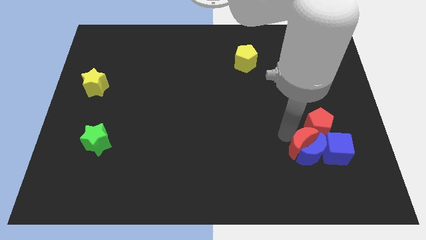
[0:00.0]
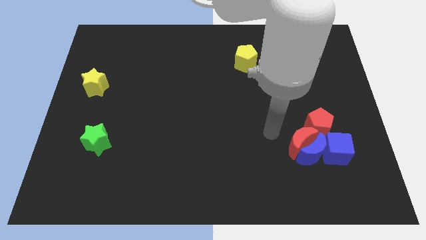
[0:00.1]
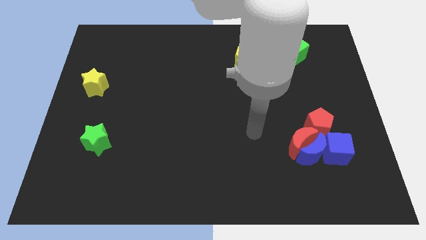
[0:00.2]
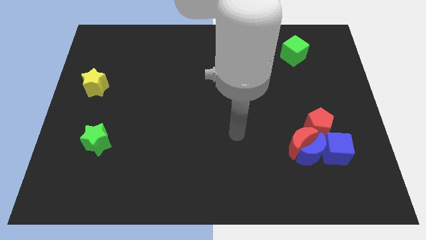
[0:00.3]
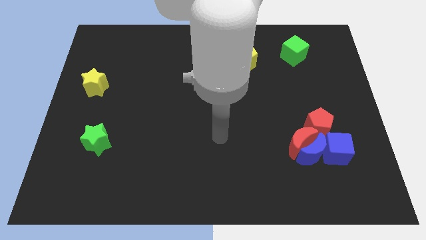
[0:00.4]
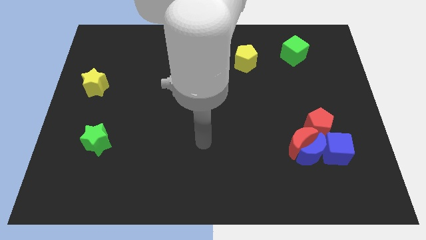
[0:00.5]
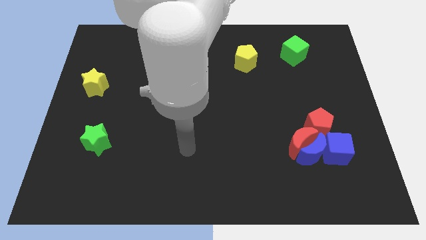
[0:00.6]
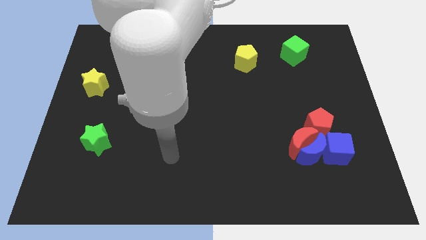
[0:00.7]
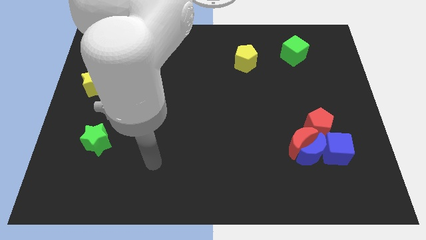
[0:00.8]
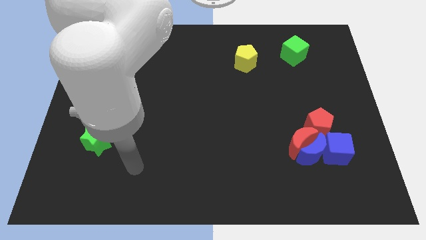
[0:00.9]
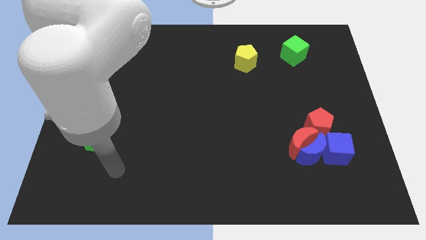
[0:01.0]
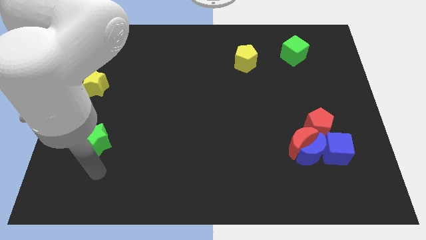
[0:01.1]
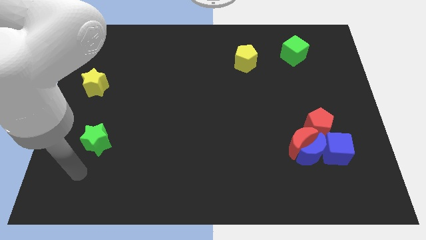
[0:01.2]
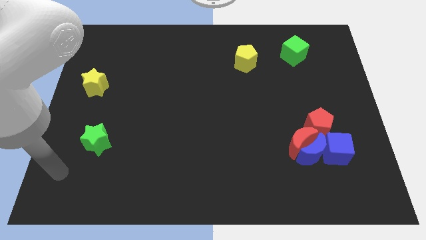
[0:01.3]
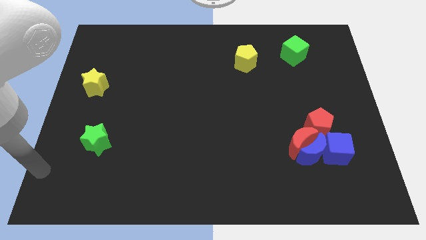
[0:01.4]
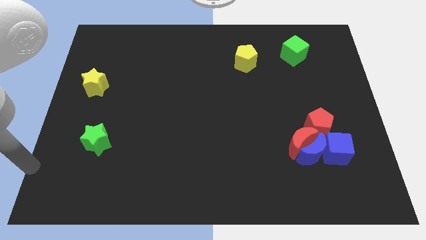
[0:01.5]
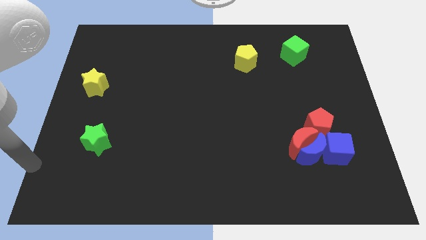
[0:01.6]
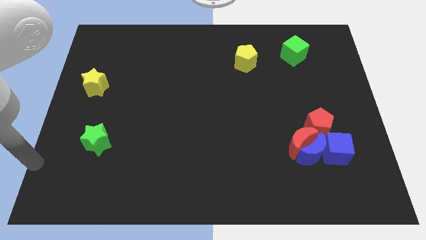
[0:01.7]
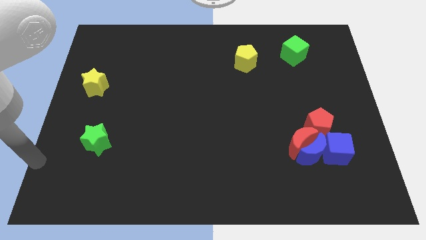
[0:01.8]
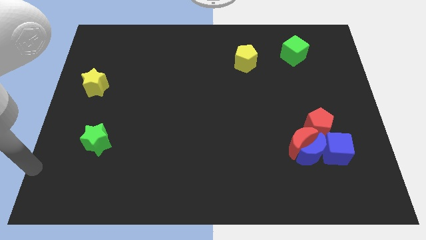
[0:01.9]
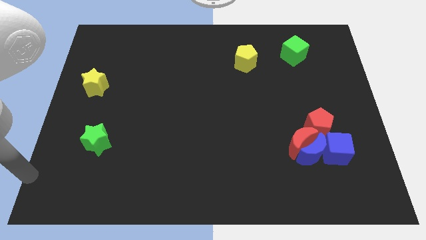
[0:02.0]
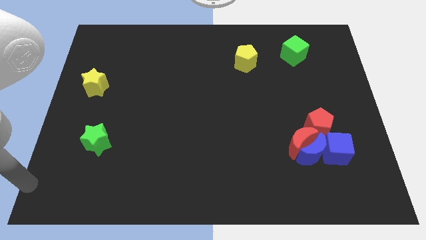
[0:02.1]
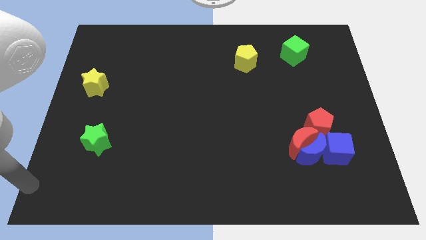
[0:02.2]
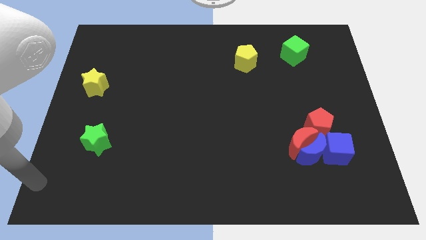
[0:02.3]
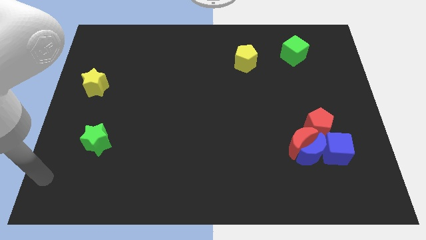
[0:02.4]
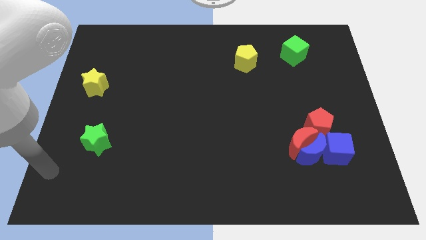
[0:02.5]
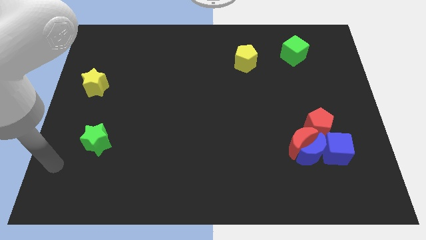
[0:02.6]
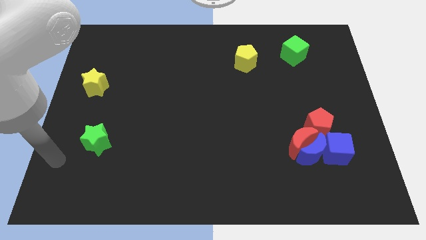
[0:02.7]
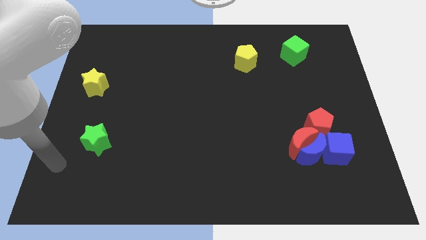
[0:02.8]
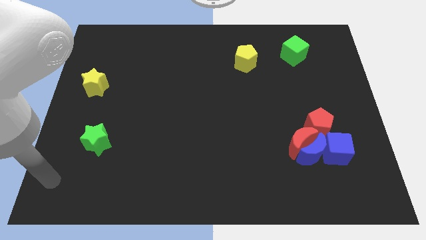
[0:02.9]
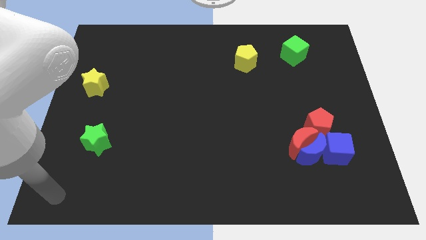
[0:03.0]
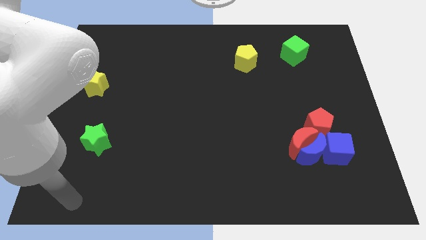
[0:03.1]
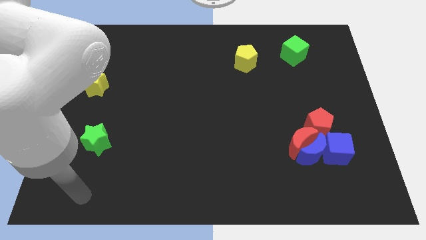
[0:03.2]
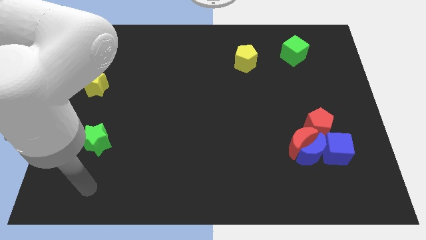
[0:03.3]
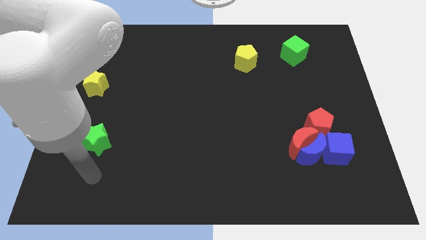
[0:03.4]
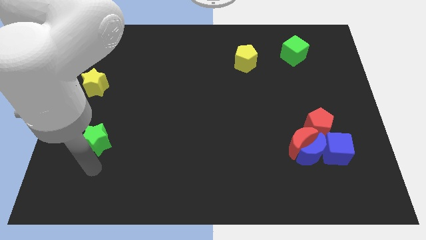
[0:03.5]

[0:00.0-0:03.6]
push your hand away from the red crescent

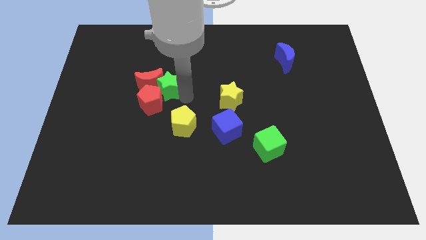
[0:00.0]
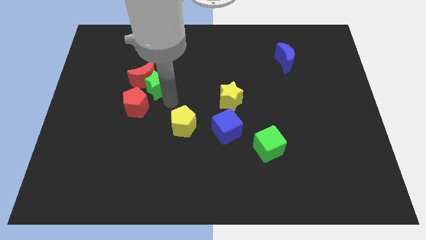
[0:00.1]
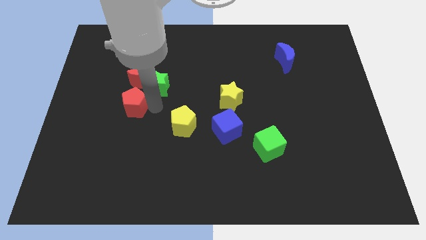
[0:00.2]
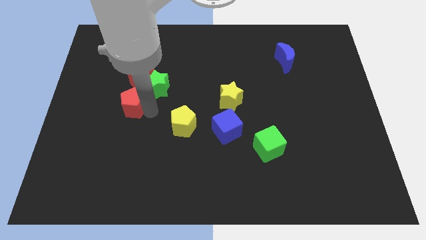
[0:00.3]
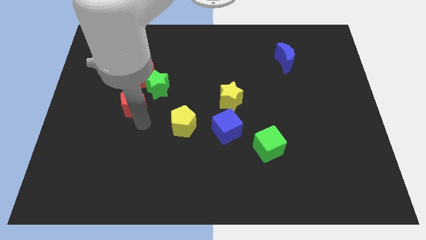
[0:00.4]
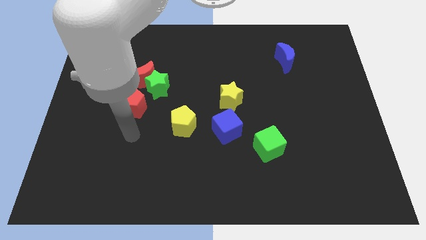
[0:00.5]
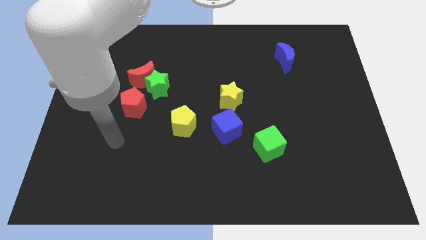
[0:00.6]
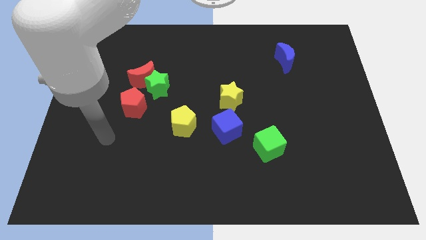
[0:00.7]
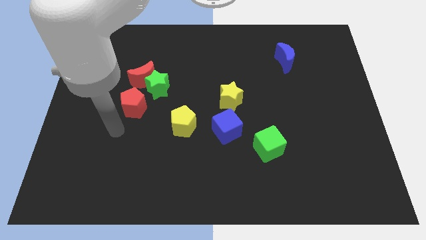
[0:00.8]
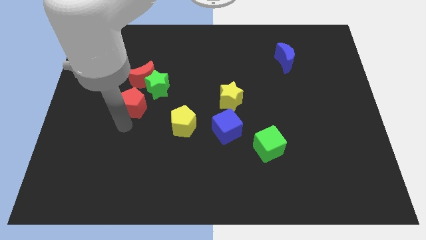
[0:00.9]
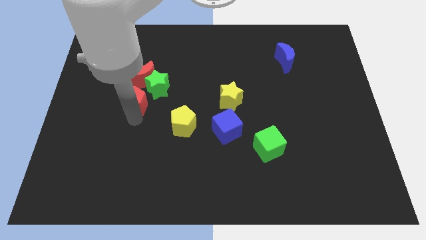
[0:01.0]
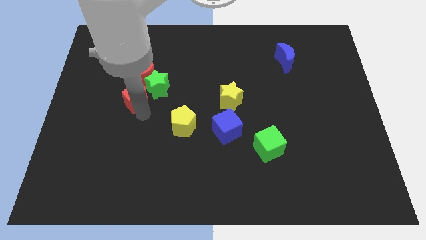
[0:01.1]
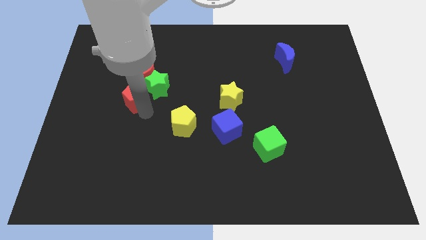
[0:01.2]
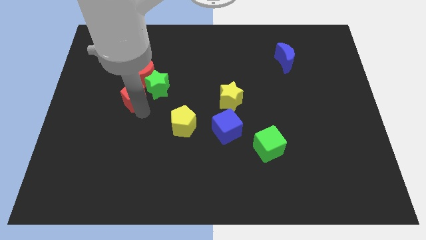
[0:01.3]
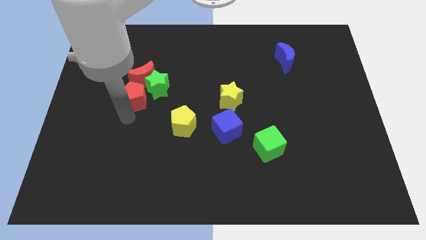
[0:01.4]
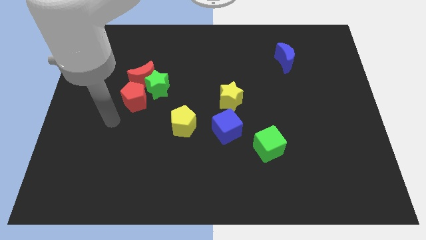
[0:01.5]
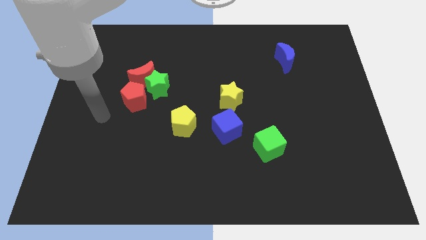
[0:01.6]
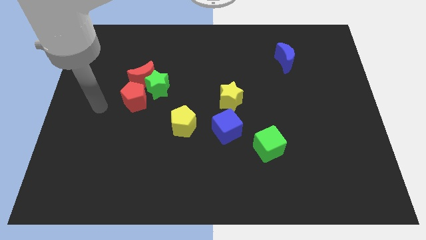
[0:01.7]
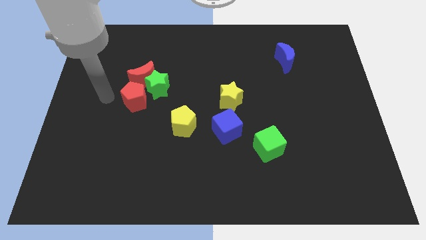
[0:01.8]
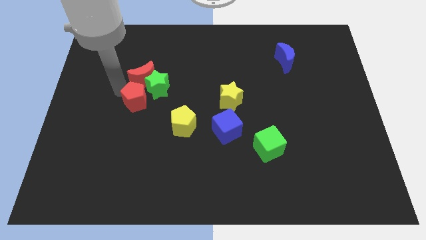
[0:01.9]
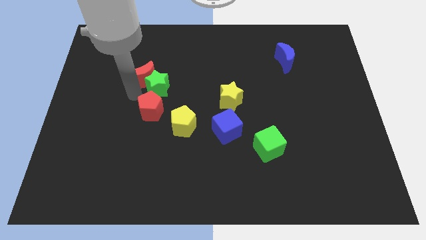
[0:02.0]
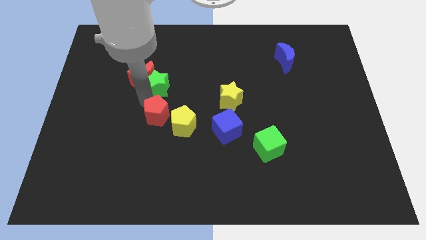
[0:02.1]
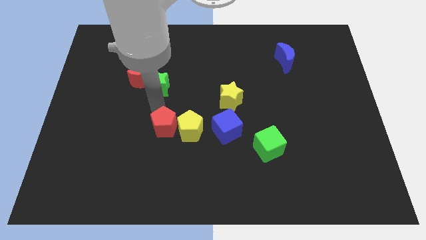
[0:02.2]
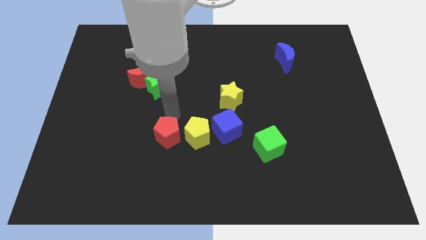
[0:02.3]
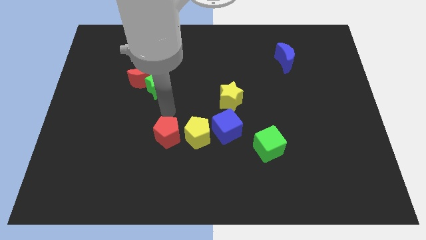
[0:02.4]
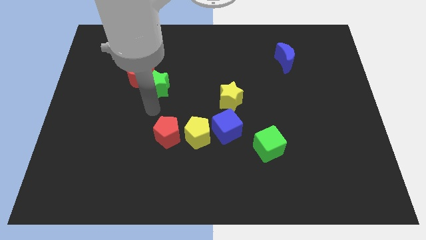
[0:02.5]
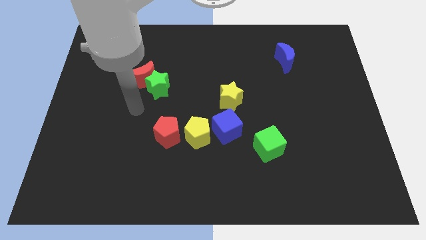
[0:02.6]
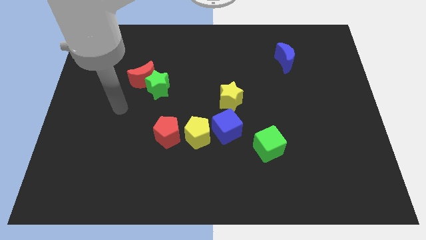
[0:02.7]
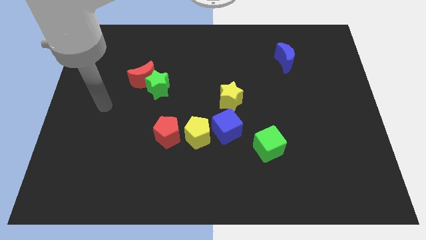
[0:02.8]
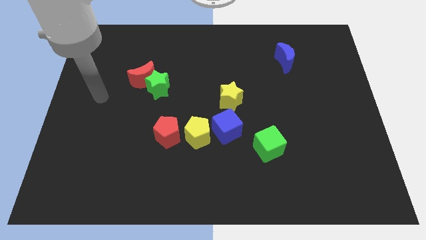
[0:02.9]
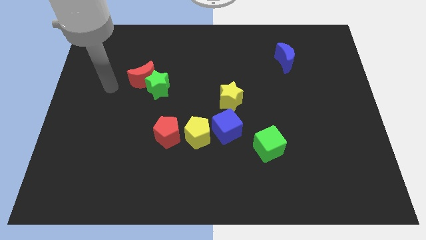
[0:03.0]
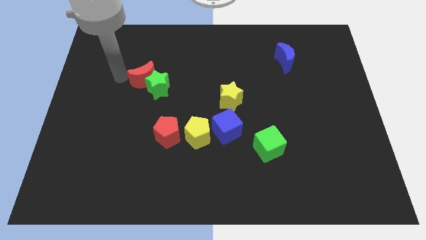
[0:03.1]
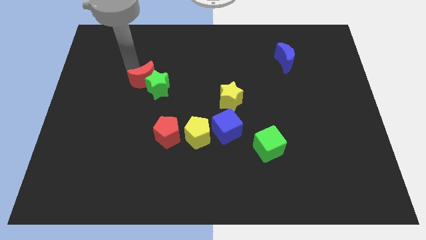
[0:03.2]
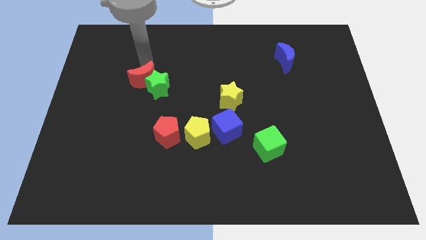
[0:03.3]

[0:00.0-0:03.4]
place the red pentagon to the left side of yellow pentagon

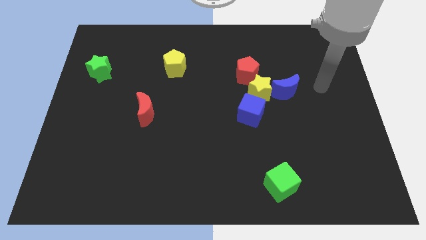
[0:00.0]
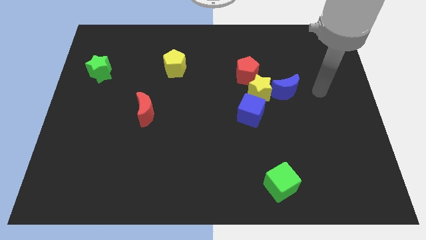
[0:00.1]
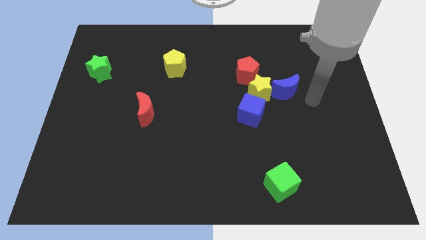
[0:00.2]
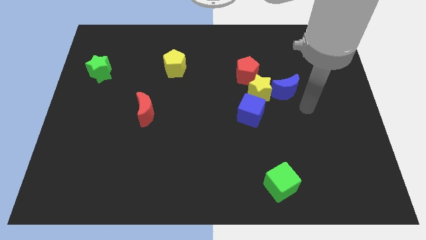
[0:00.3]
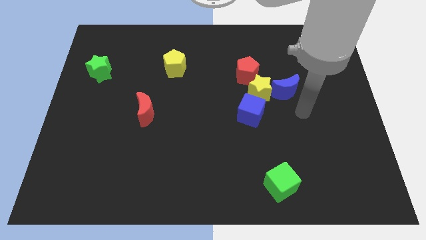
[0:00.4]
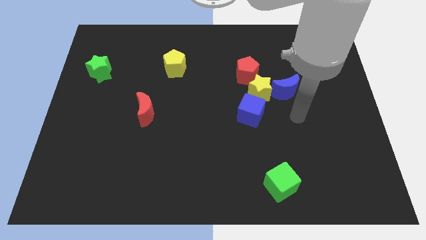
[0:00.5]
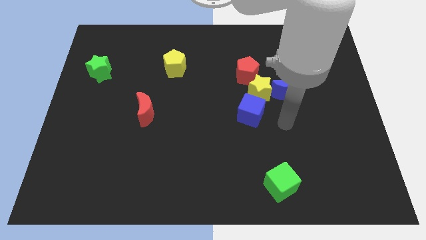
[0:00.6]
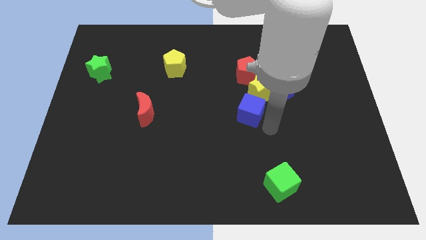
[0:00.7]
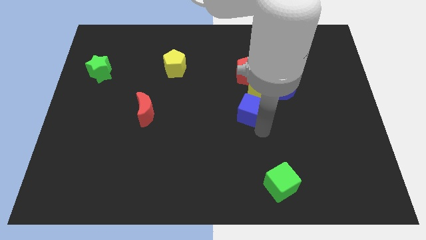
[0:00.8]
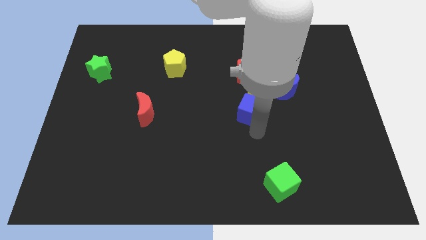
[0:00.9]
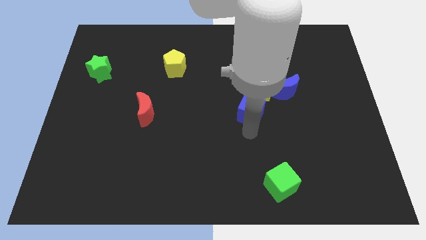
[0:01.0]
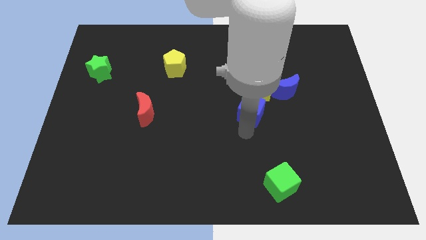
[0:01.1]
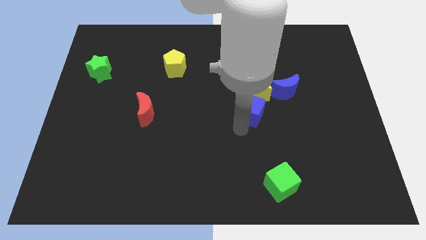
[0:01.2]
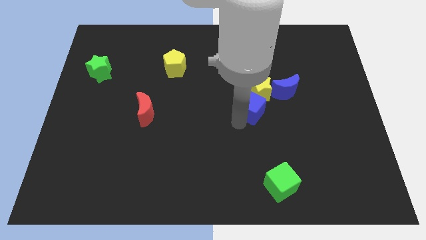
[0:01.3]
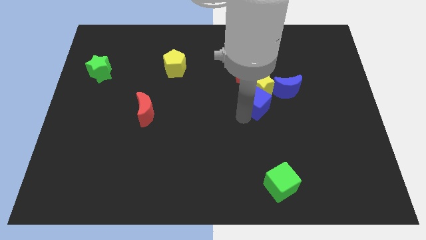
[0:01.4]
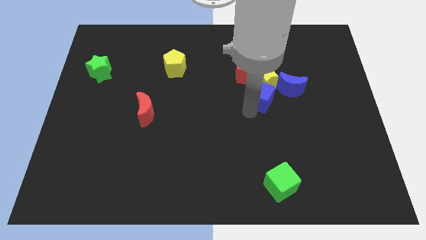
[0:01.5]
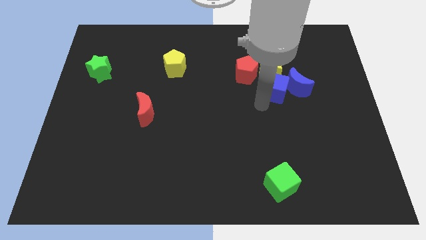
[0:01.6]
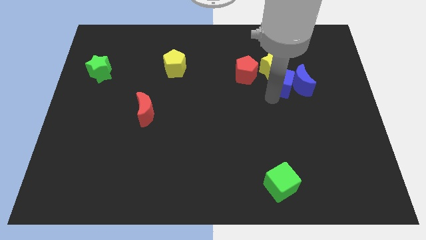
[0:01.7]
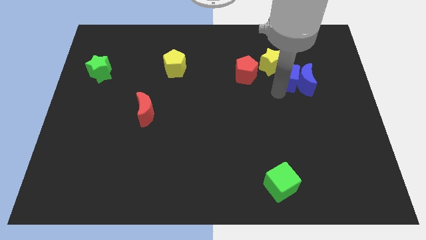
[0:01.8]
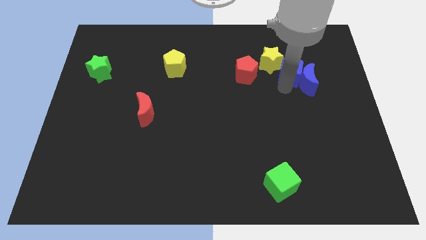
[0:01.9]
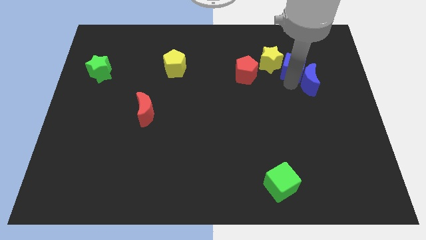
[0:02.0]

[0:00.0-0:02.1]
push blue cube in between blue moon and yellow star
